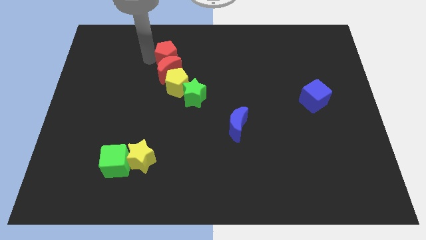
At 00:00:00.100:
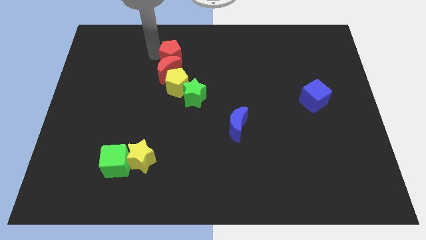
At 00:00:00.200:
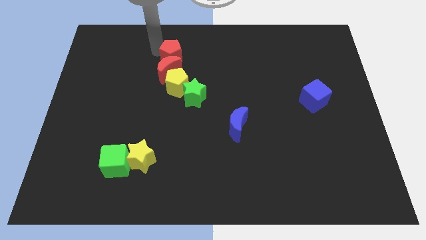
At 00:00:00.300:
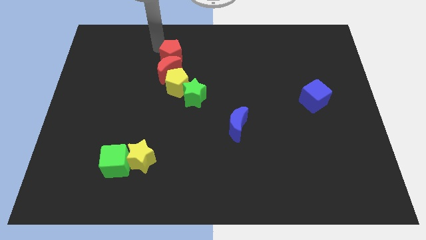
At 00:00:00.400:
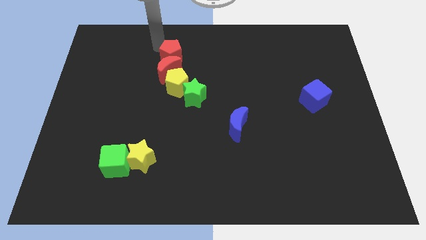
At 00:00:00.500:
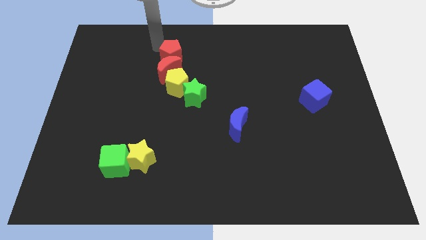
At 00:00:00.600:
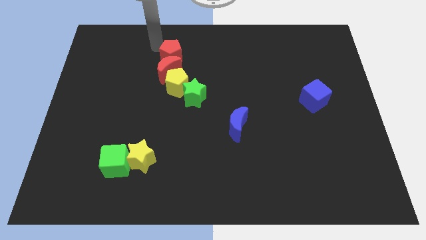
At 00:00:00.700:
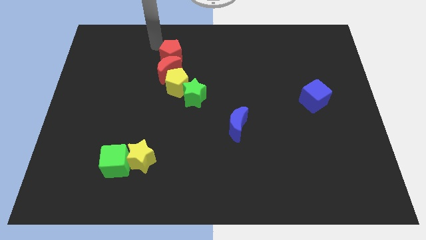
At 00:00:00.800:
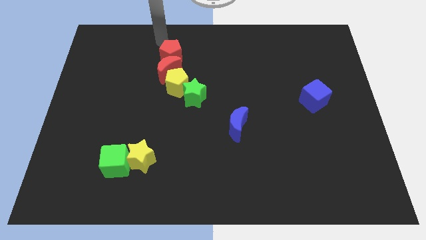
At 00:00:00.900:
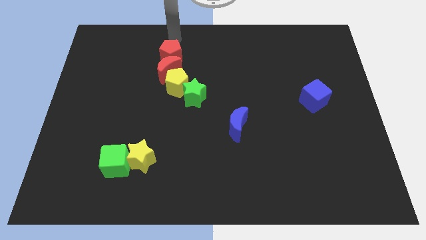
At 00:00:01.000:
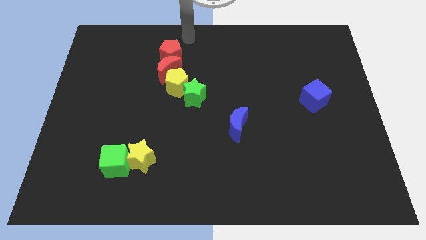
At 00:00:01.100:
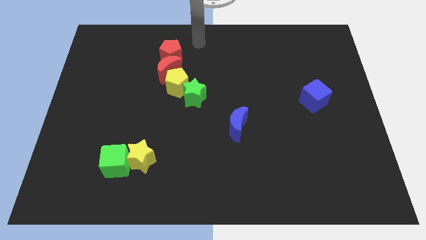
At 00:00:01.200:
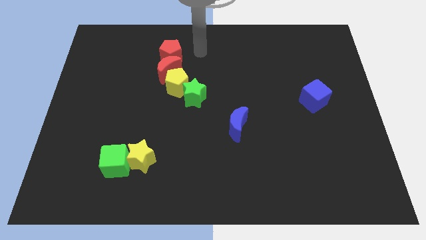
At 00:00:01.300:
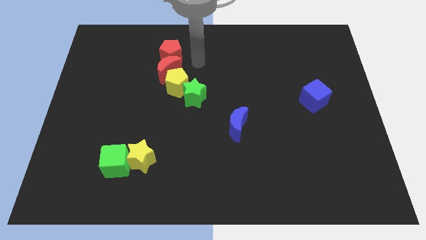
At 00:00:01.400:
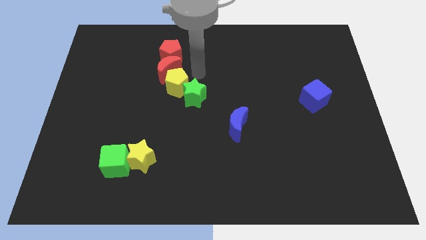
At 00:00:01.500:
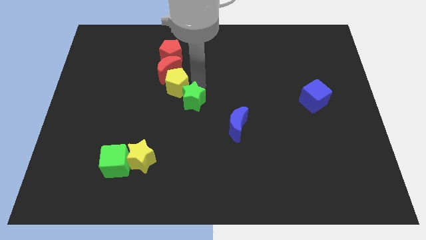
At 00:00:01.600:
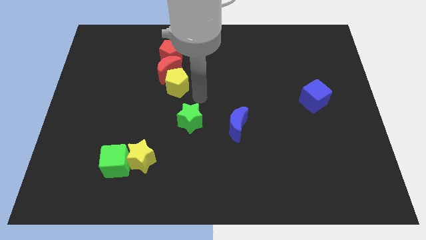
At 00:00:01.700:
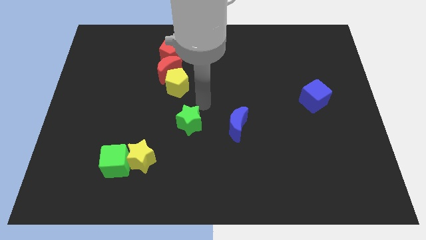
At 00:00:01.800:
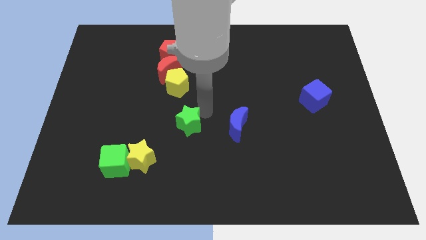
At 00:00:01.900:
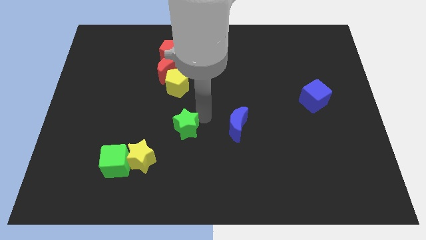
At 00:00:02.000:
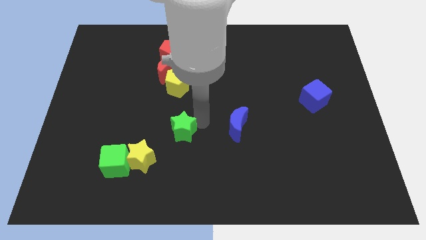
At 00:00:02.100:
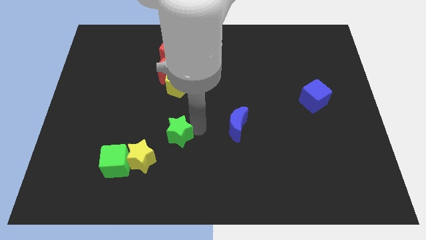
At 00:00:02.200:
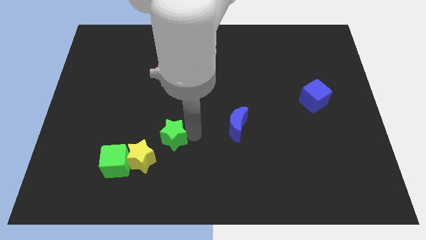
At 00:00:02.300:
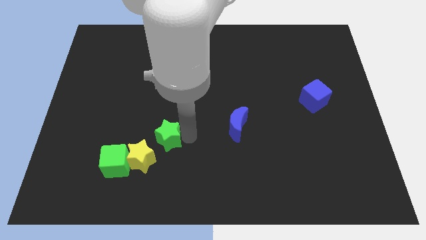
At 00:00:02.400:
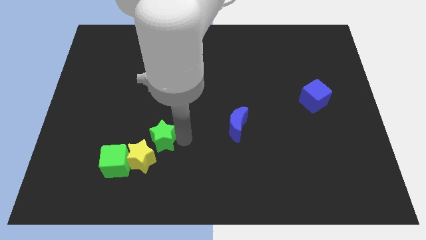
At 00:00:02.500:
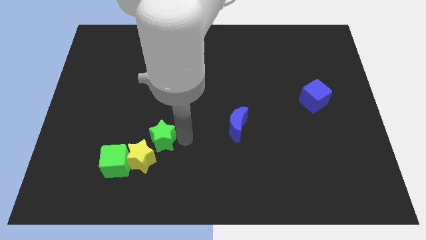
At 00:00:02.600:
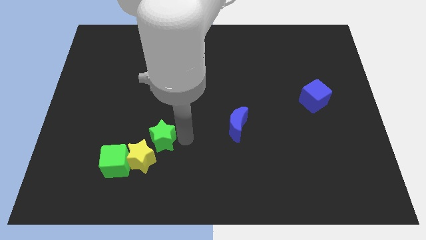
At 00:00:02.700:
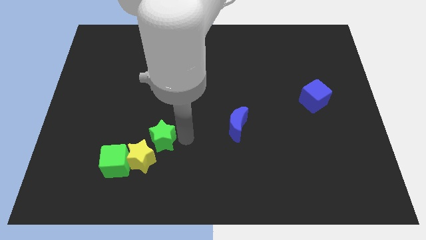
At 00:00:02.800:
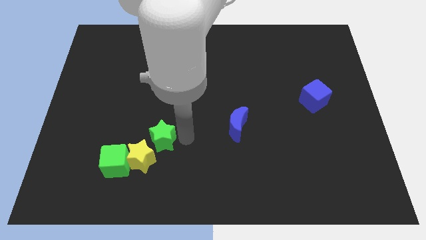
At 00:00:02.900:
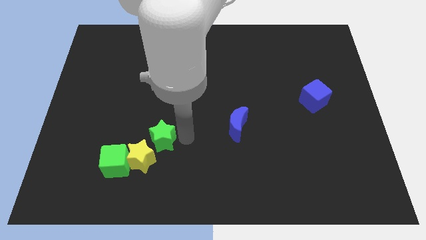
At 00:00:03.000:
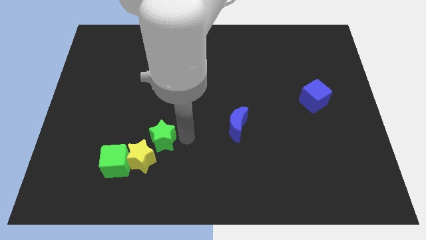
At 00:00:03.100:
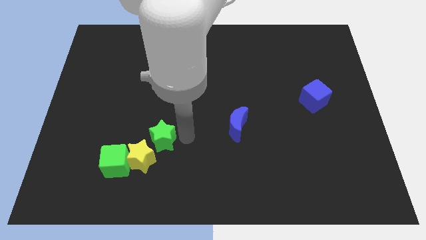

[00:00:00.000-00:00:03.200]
push green star near yellow star

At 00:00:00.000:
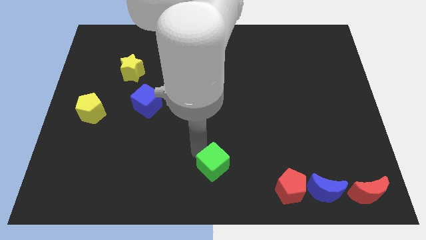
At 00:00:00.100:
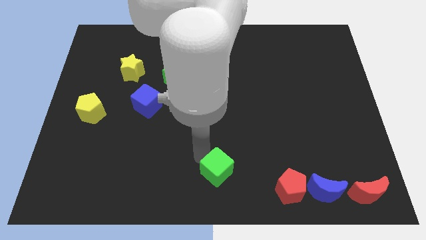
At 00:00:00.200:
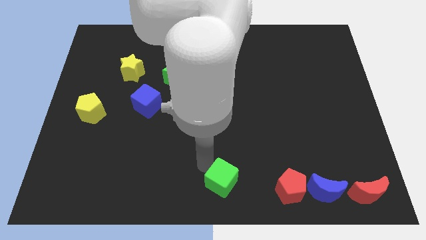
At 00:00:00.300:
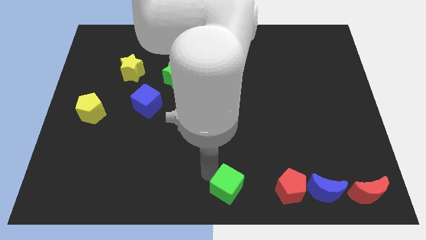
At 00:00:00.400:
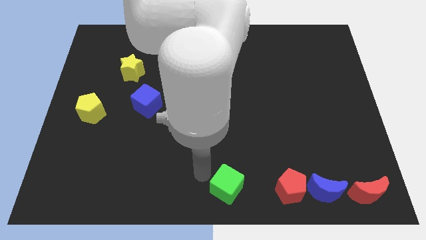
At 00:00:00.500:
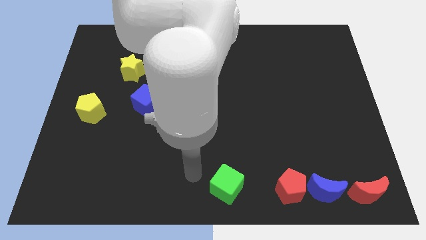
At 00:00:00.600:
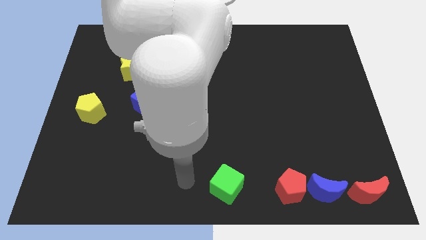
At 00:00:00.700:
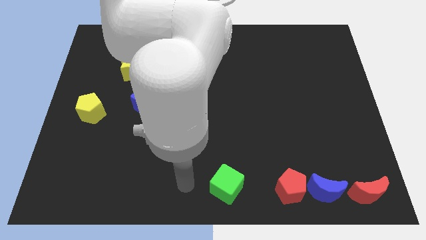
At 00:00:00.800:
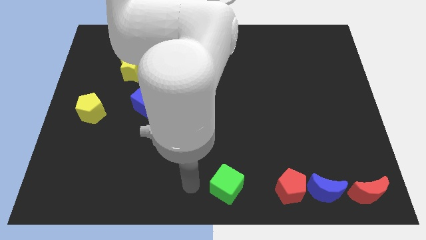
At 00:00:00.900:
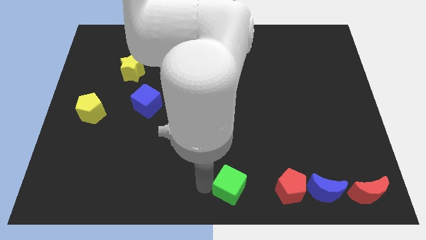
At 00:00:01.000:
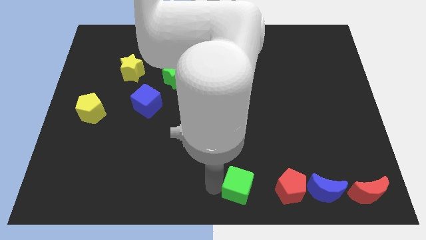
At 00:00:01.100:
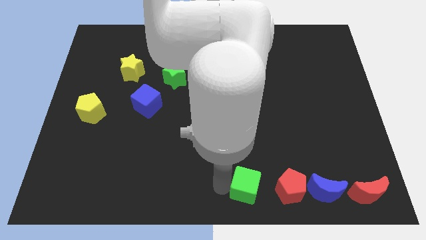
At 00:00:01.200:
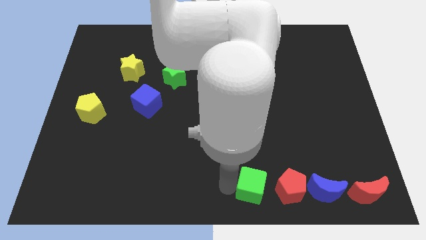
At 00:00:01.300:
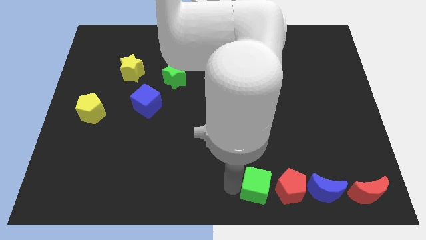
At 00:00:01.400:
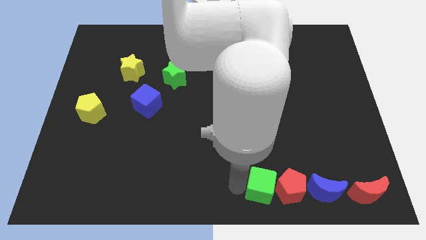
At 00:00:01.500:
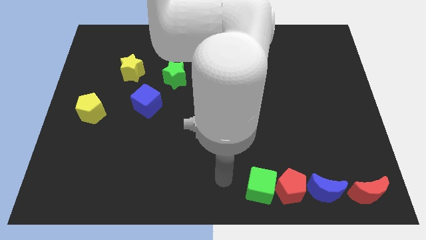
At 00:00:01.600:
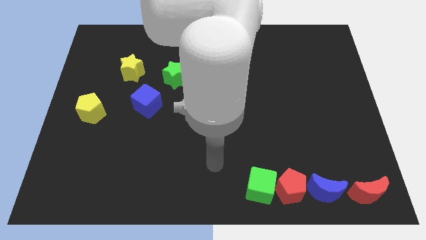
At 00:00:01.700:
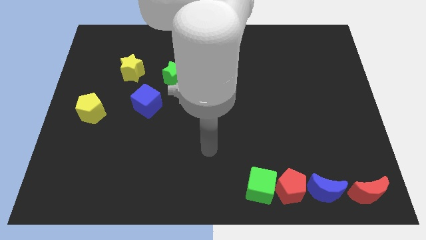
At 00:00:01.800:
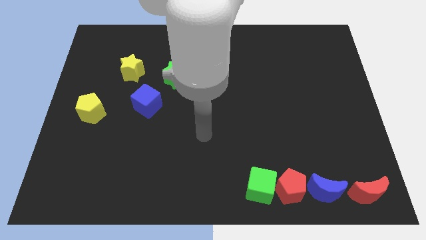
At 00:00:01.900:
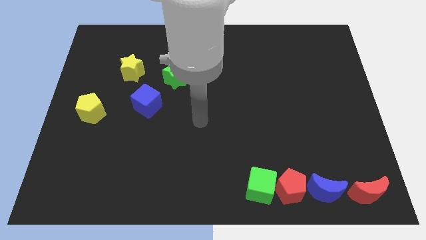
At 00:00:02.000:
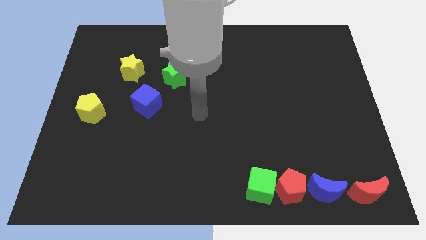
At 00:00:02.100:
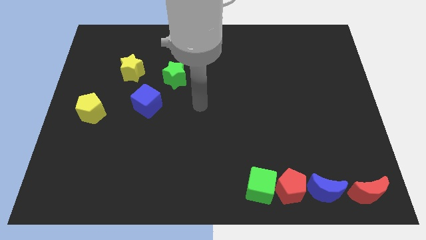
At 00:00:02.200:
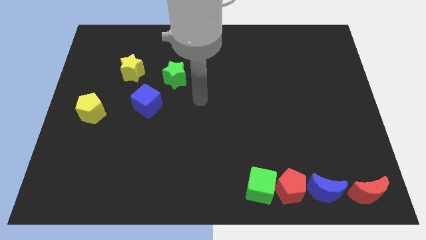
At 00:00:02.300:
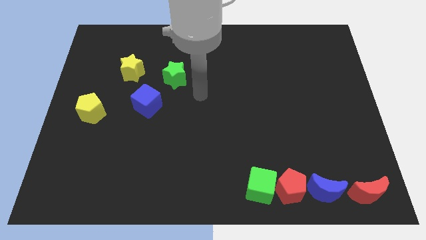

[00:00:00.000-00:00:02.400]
place the green cube to the left side of red pentagon and move away

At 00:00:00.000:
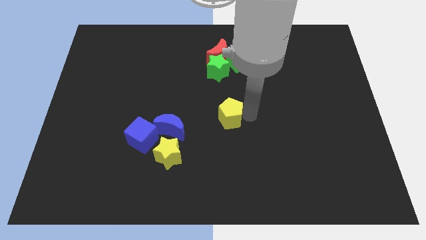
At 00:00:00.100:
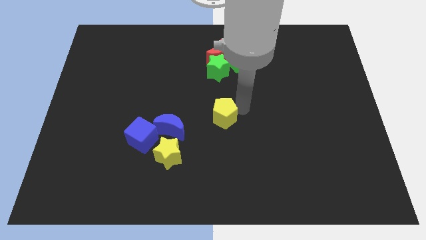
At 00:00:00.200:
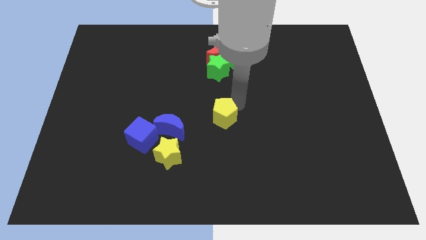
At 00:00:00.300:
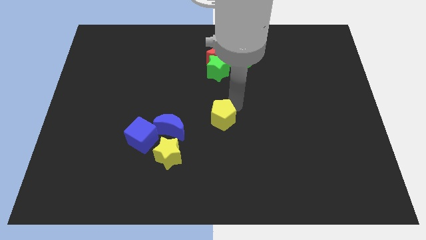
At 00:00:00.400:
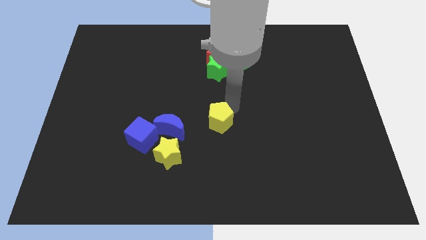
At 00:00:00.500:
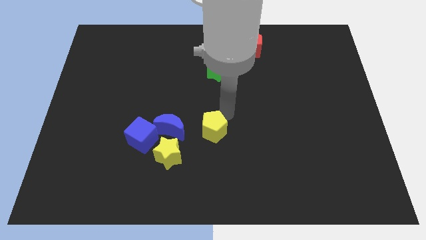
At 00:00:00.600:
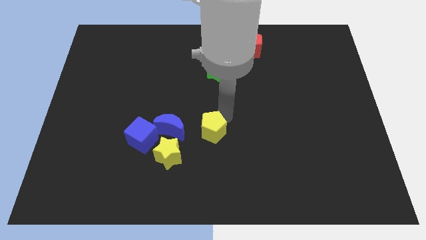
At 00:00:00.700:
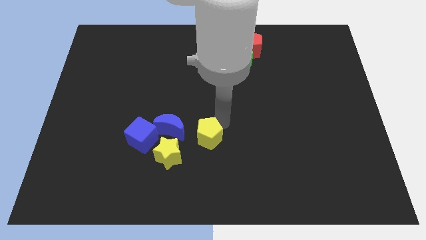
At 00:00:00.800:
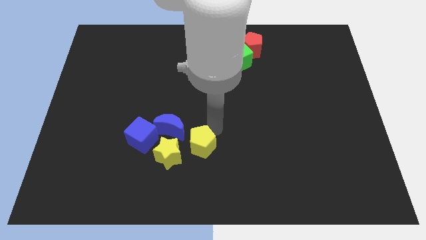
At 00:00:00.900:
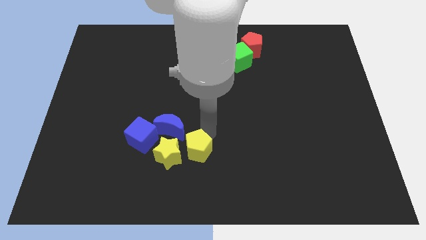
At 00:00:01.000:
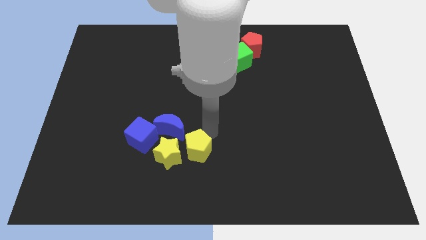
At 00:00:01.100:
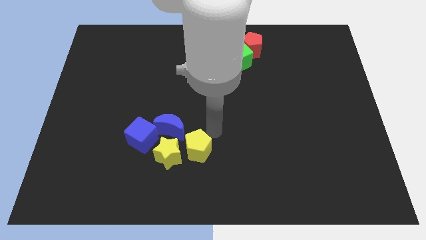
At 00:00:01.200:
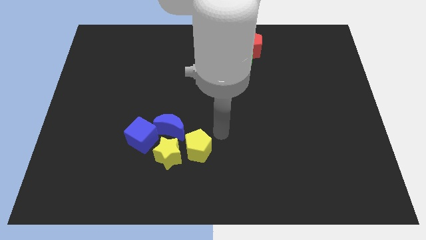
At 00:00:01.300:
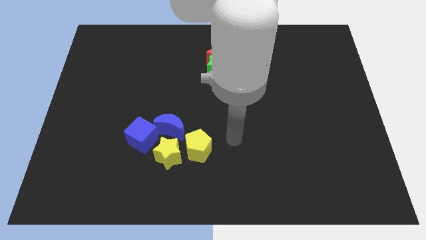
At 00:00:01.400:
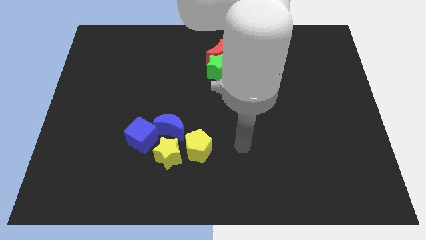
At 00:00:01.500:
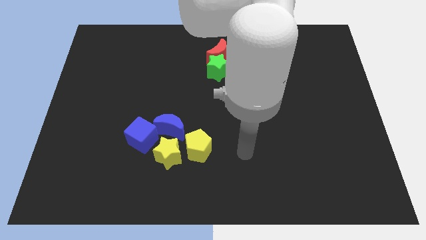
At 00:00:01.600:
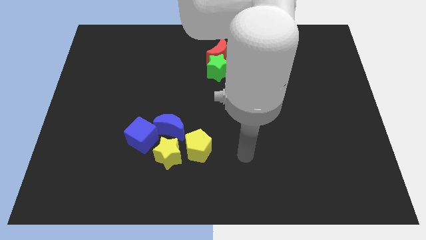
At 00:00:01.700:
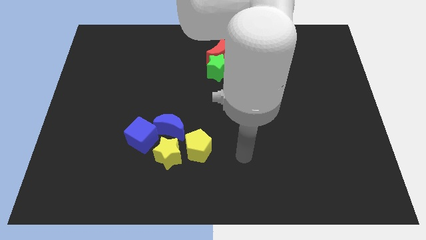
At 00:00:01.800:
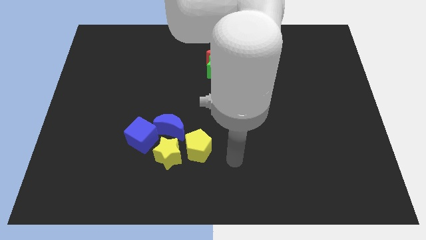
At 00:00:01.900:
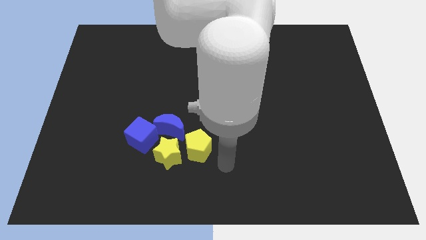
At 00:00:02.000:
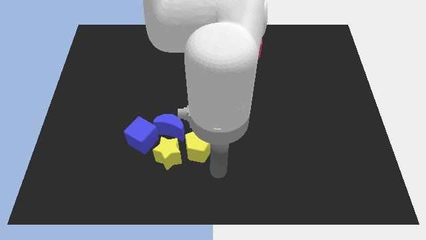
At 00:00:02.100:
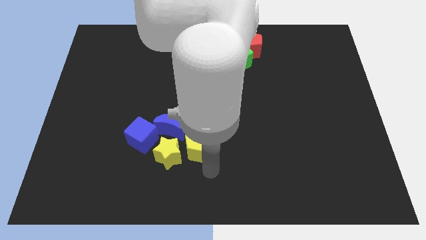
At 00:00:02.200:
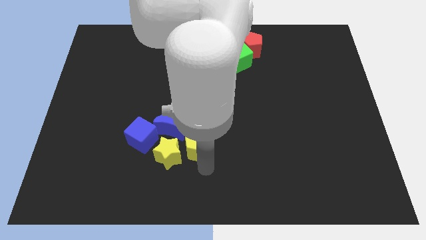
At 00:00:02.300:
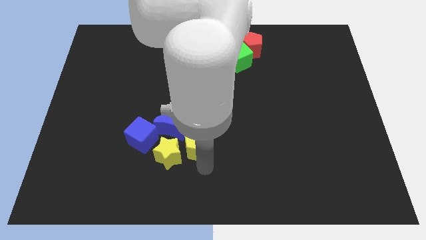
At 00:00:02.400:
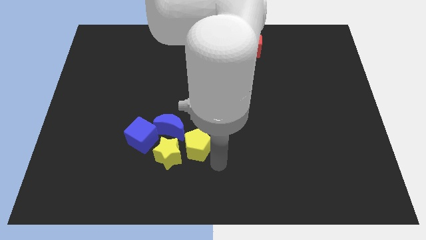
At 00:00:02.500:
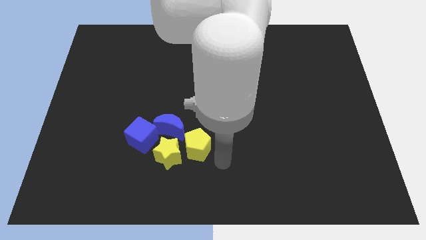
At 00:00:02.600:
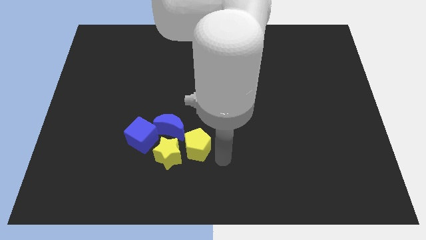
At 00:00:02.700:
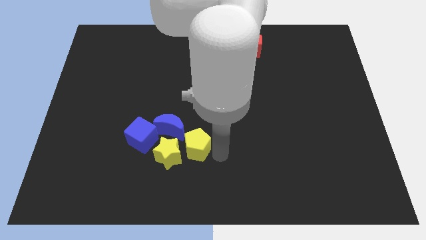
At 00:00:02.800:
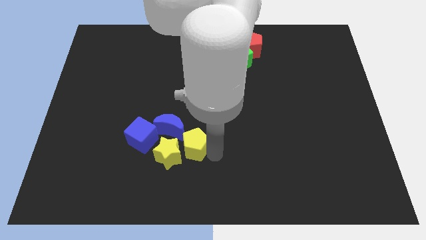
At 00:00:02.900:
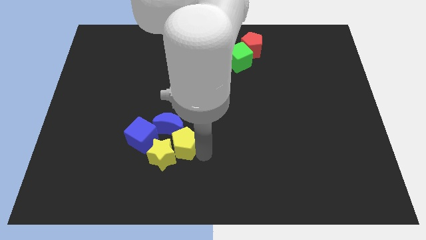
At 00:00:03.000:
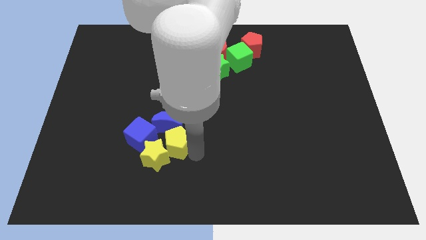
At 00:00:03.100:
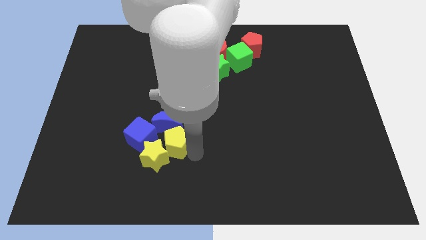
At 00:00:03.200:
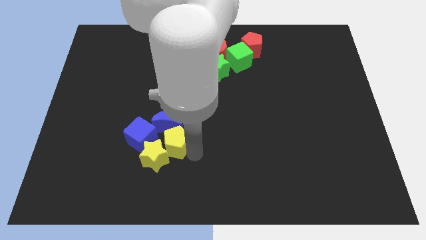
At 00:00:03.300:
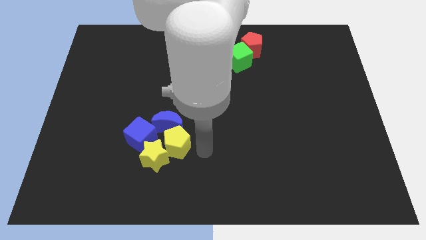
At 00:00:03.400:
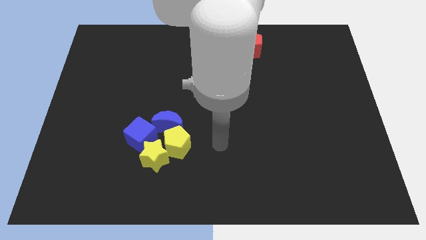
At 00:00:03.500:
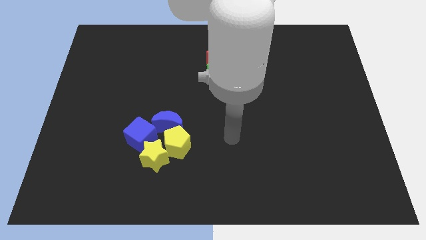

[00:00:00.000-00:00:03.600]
push yellow pentagon into the yellow star
